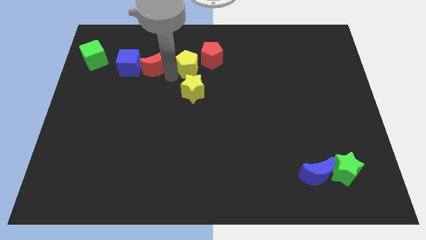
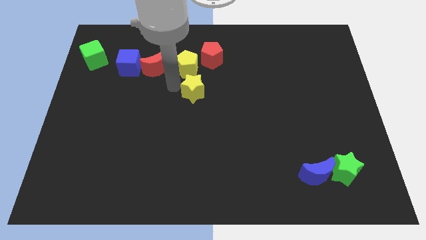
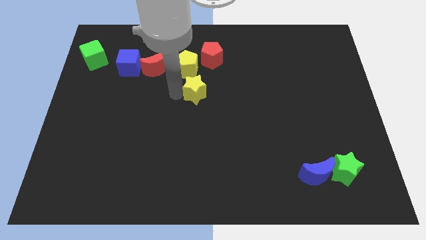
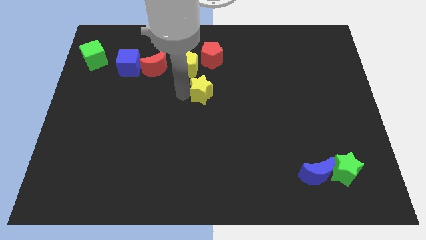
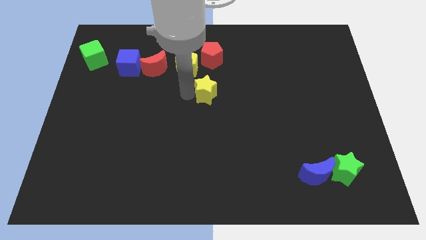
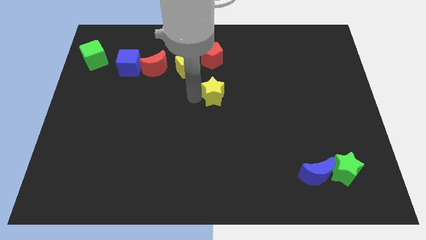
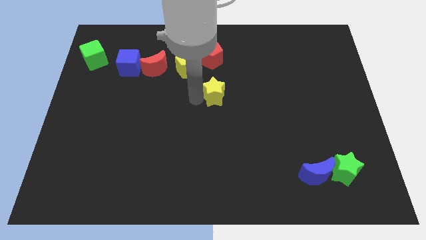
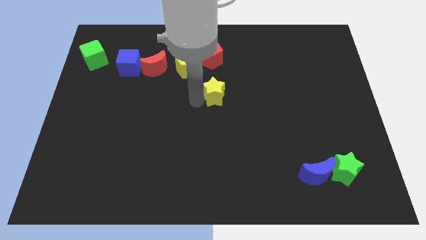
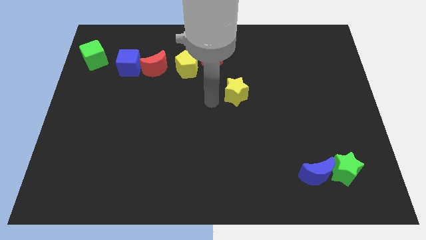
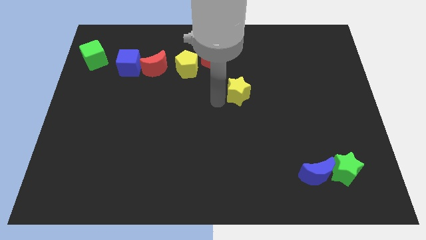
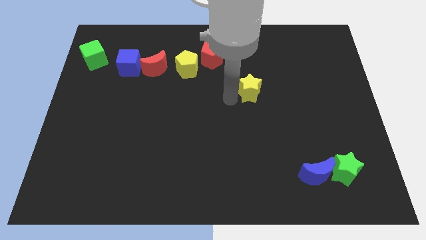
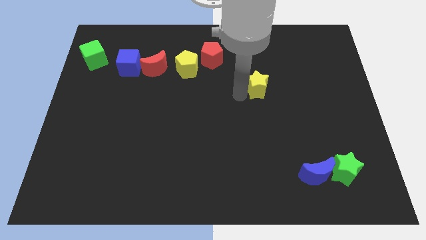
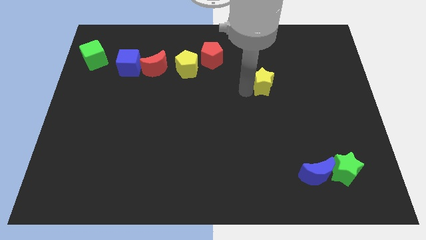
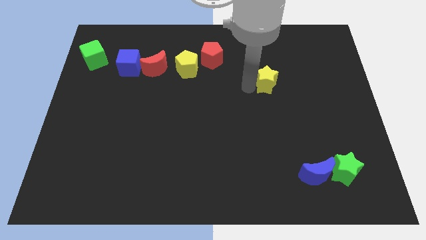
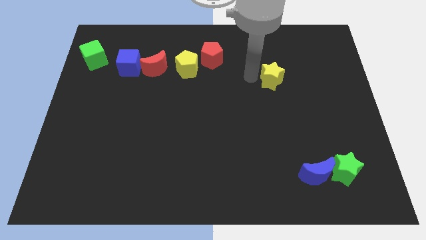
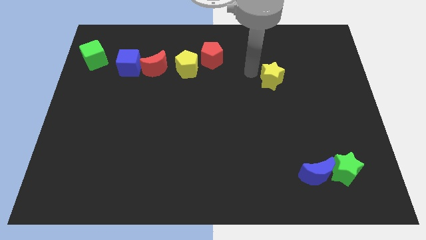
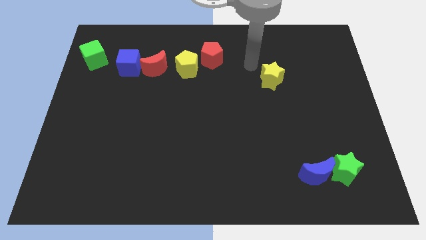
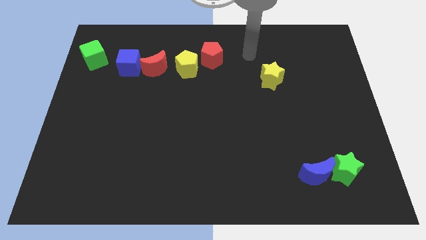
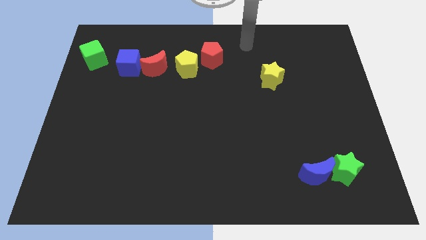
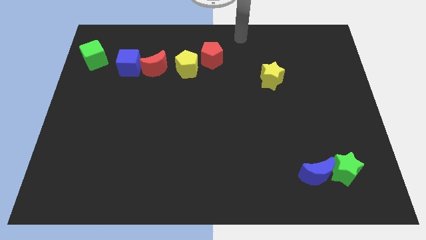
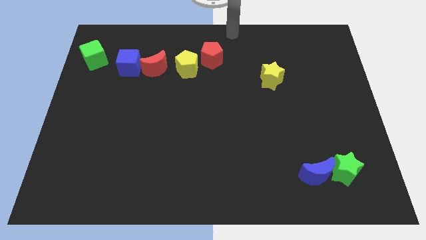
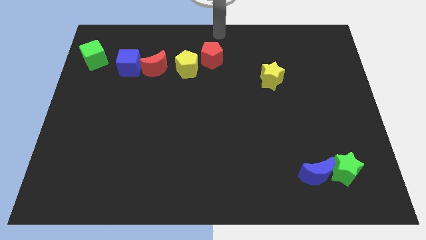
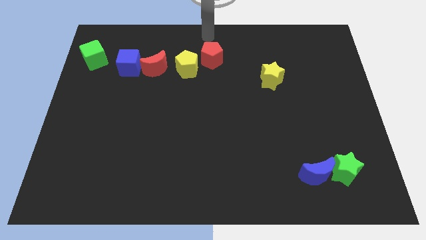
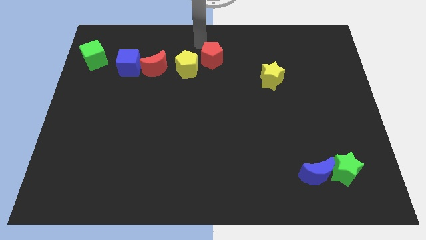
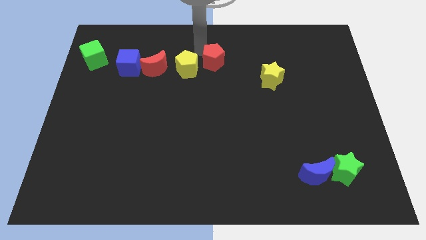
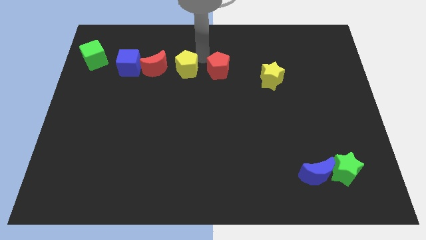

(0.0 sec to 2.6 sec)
separate yellow star and yellow pentagon

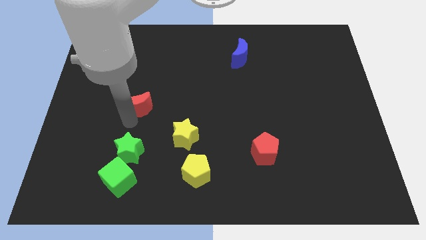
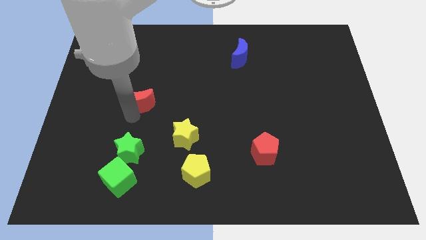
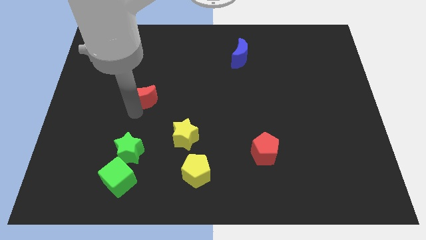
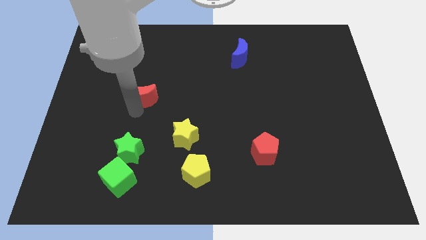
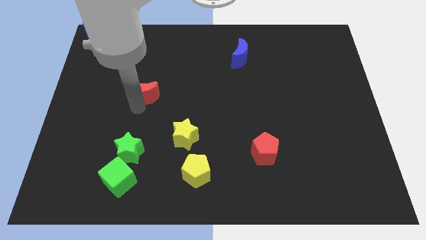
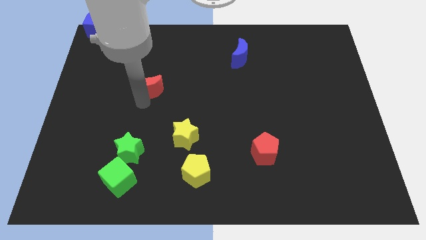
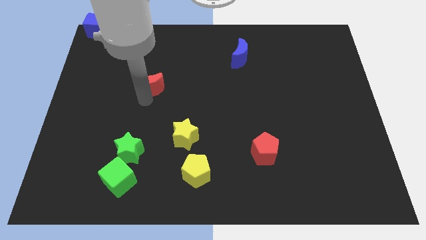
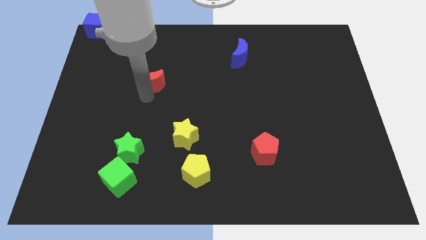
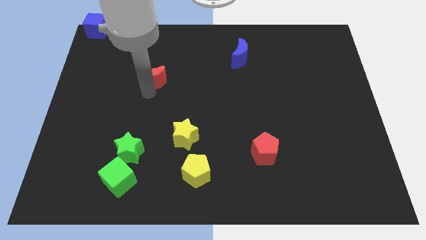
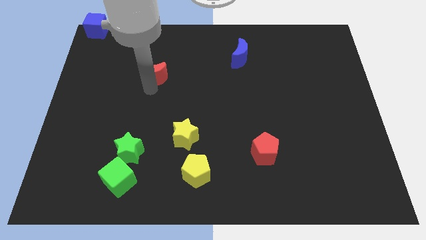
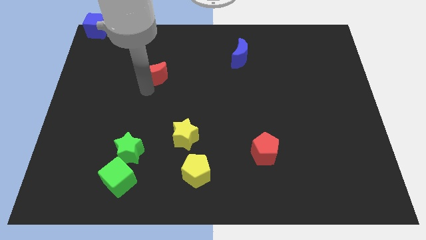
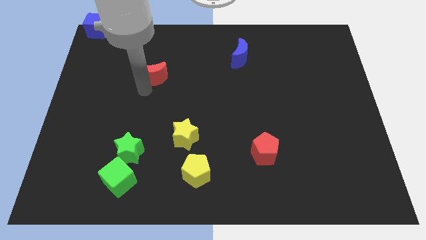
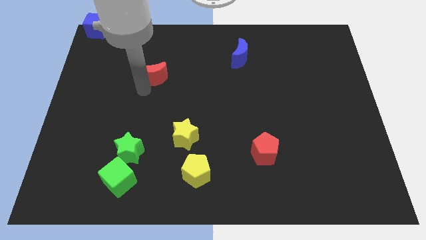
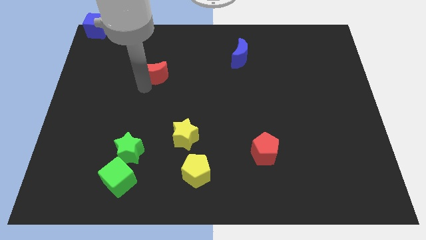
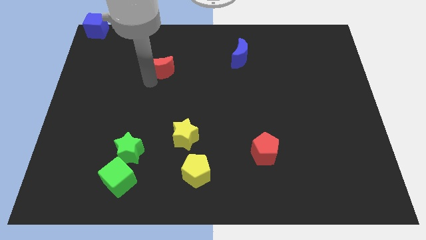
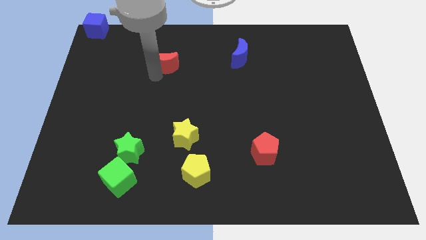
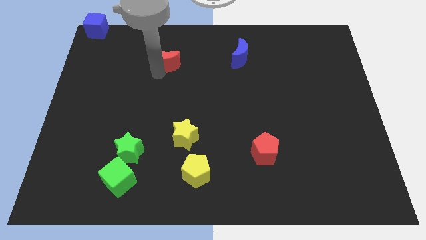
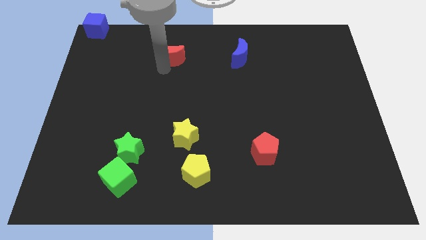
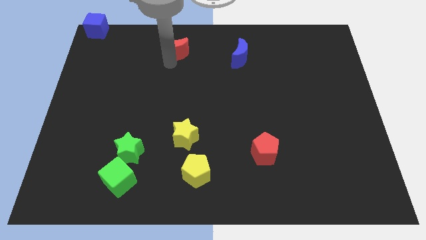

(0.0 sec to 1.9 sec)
move the red crescent to the left of the blue crescent

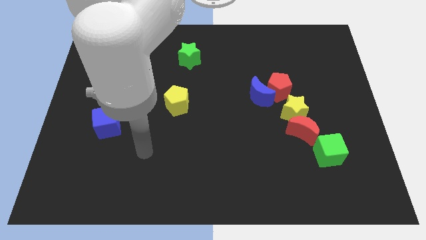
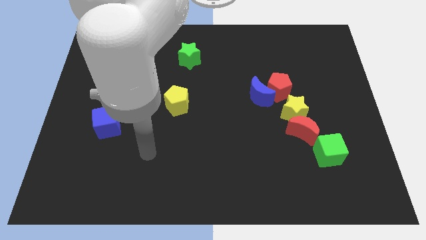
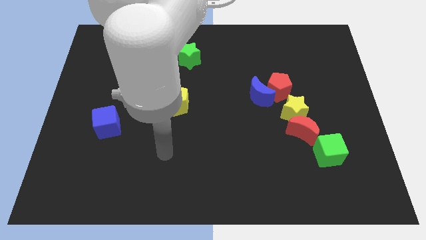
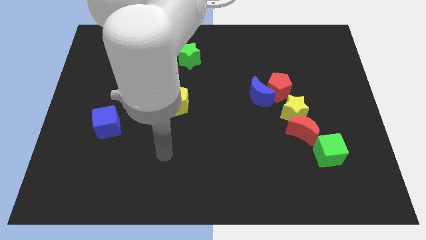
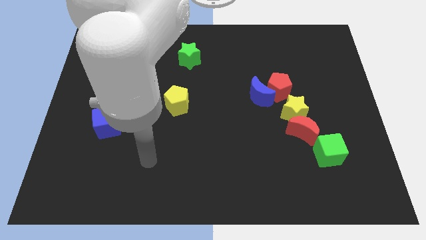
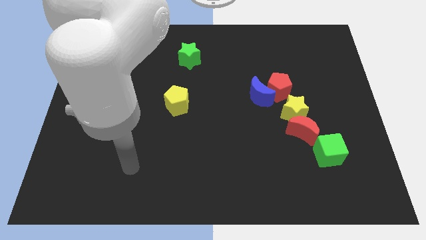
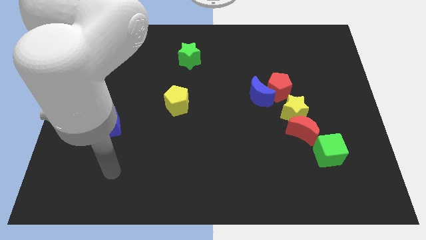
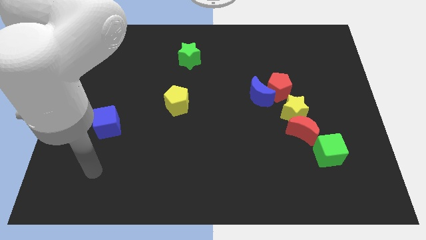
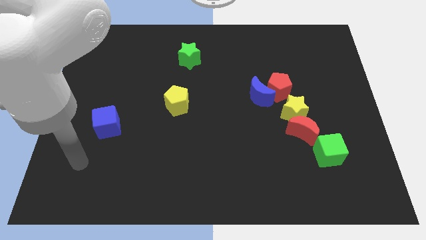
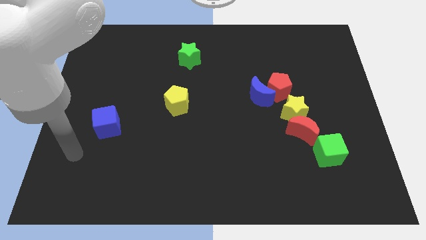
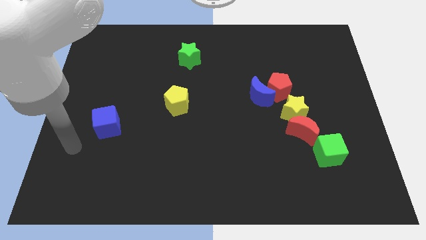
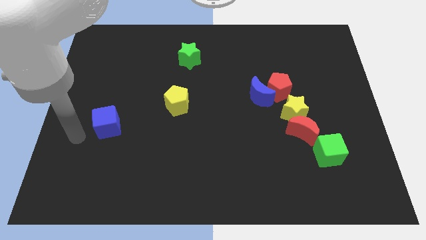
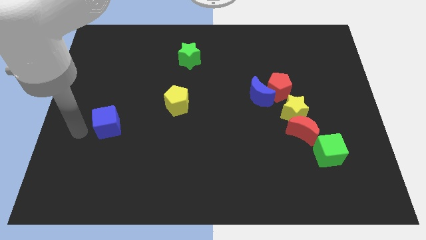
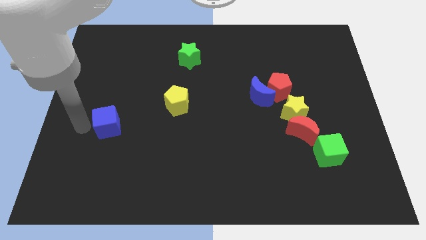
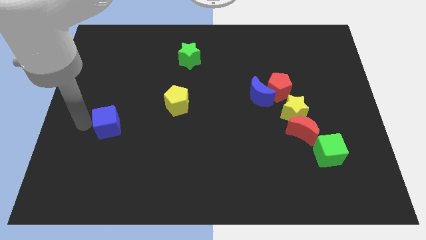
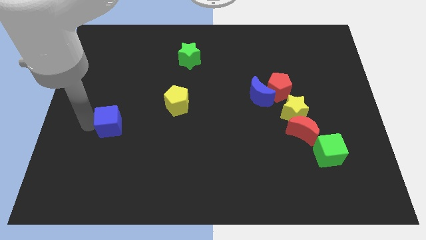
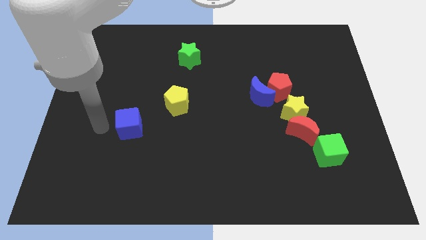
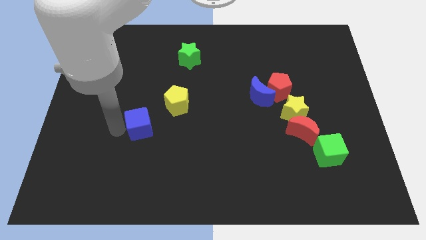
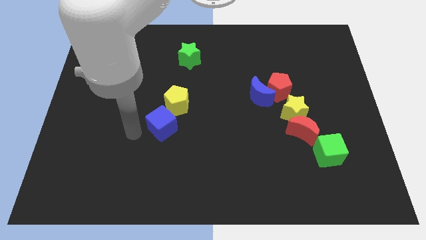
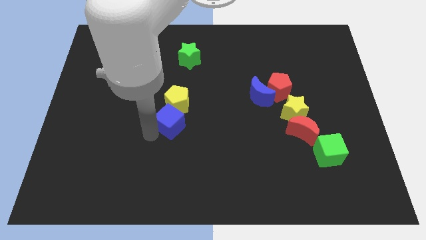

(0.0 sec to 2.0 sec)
move the blue cube towards the yellow pentagon

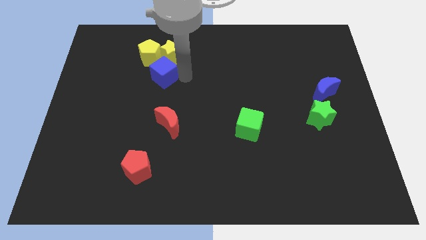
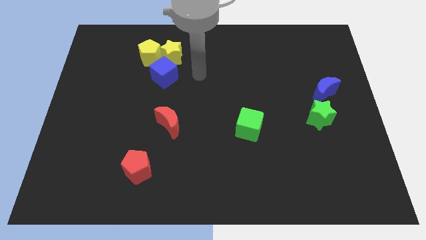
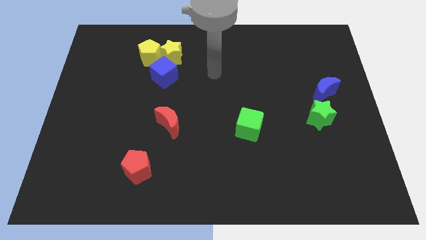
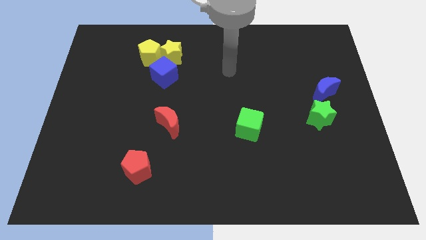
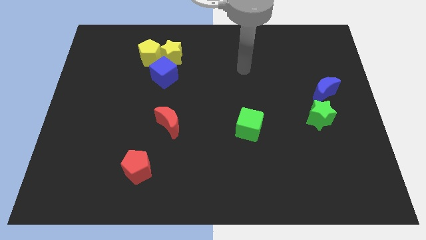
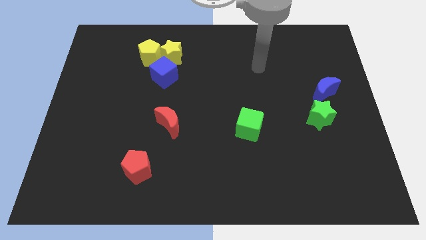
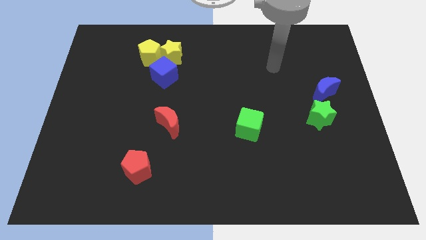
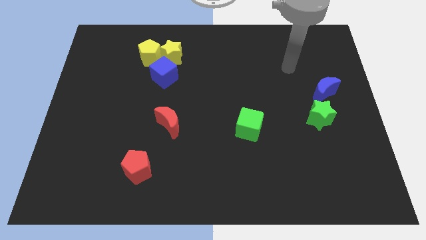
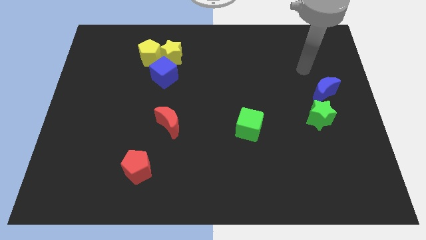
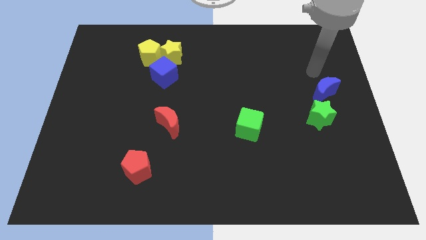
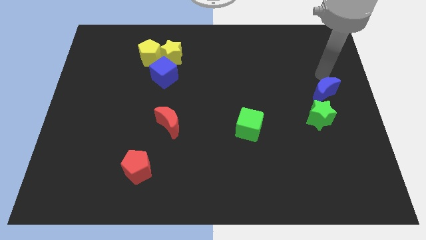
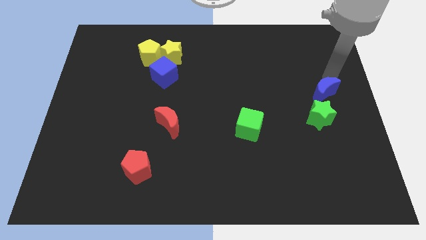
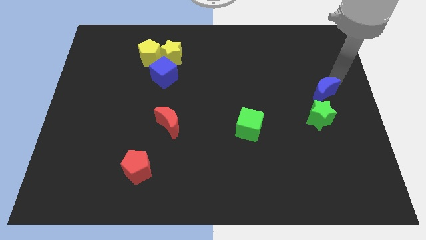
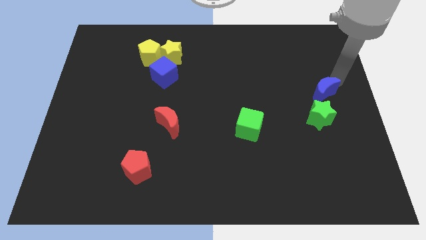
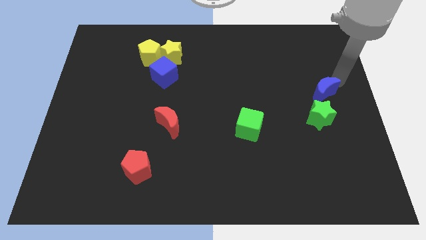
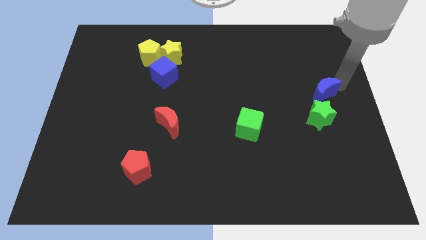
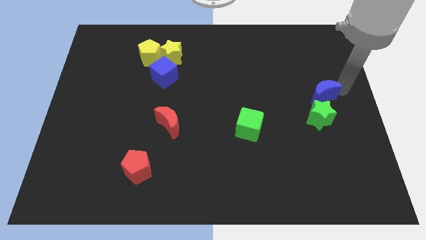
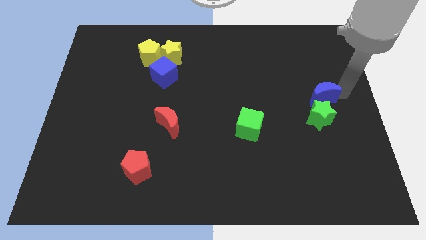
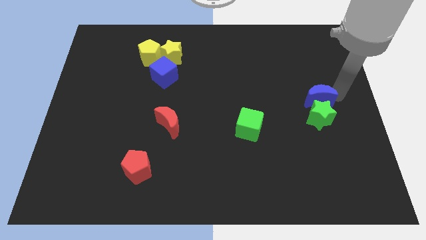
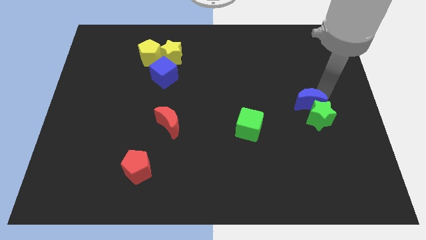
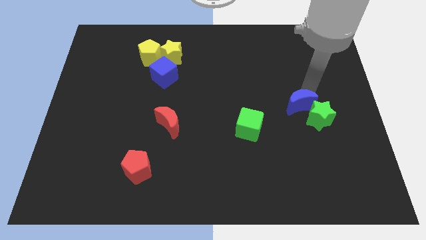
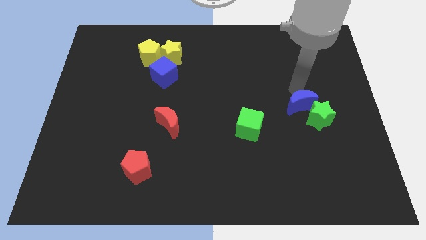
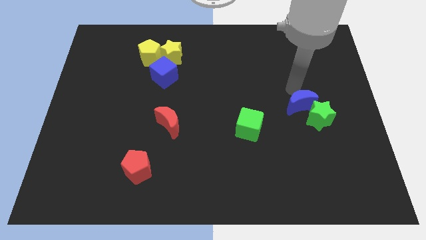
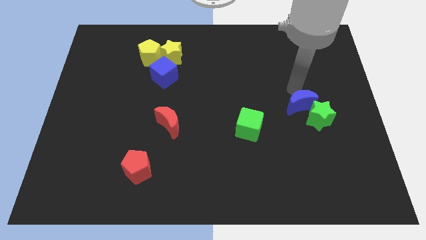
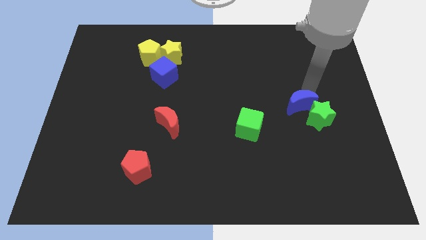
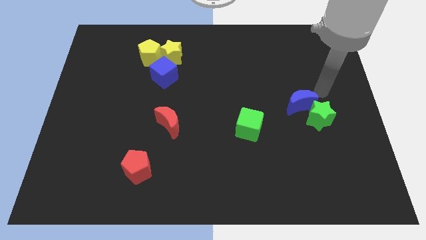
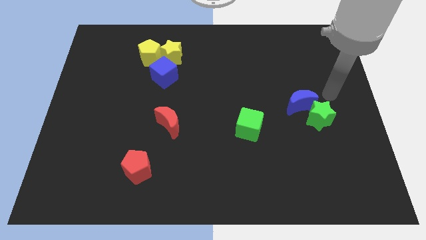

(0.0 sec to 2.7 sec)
move the blue crescent slightly closer to the green star
